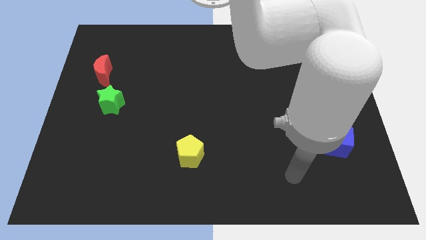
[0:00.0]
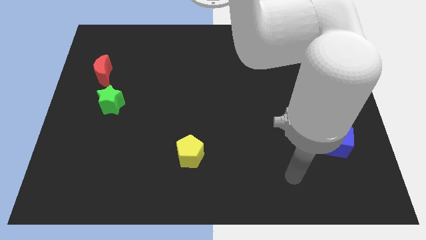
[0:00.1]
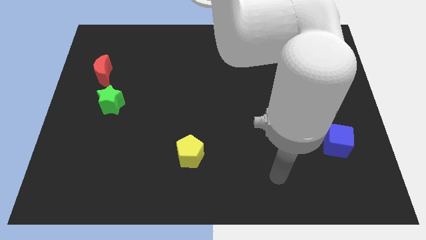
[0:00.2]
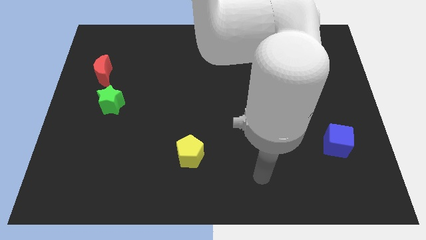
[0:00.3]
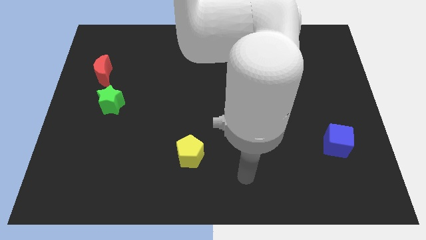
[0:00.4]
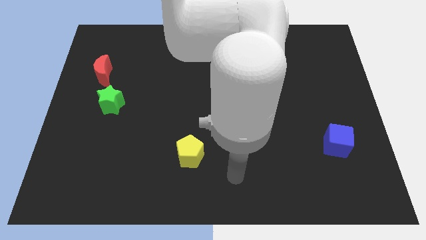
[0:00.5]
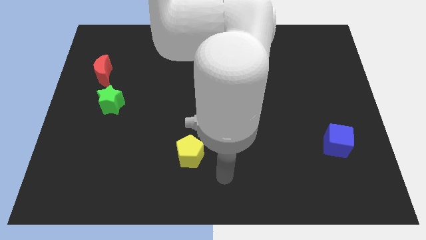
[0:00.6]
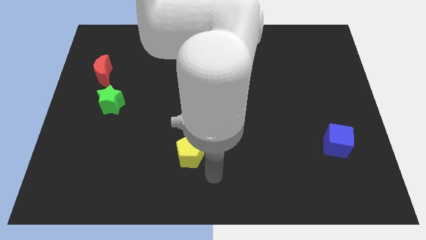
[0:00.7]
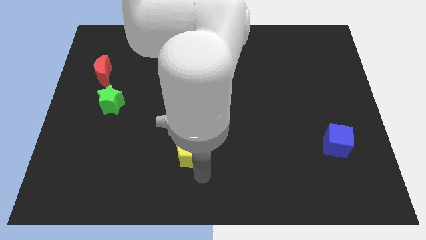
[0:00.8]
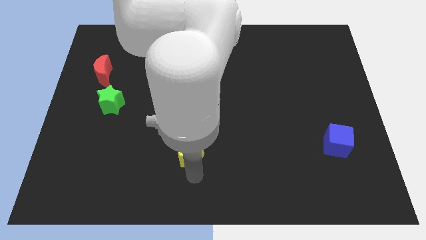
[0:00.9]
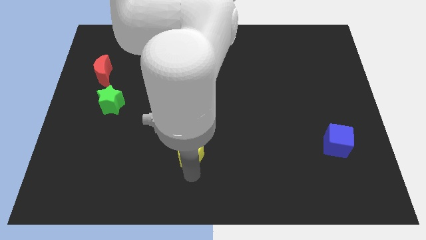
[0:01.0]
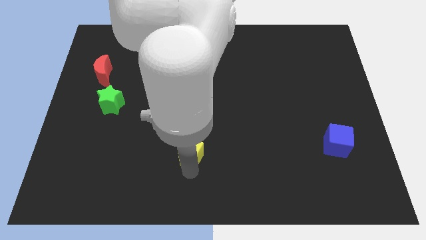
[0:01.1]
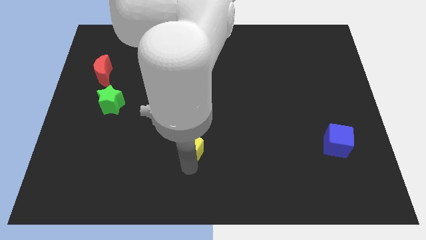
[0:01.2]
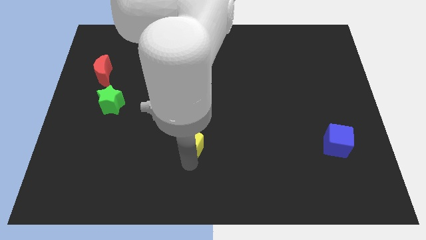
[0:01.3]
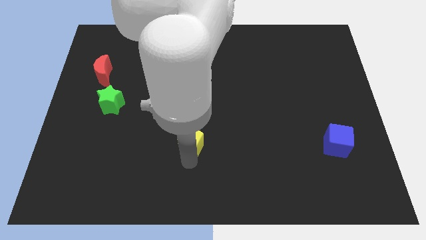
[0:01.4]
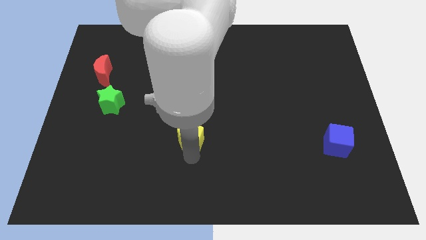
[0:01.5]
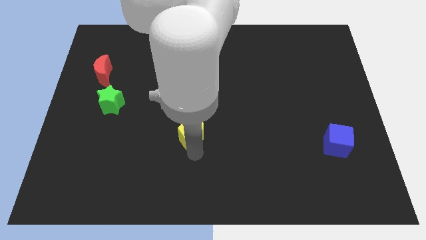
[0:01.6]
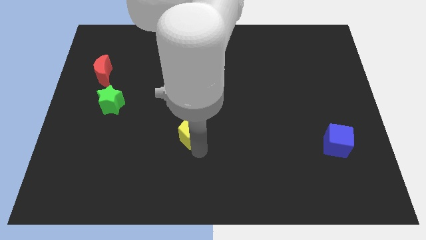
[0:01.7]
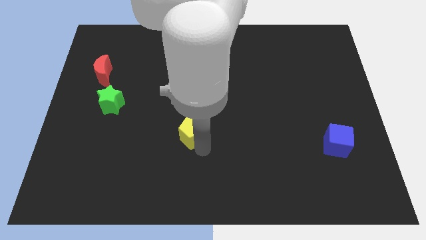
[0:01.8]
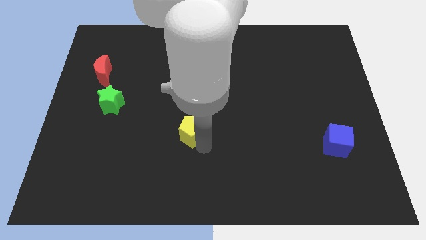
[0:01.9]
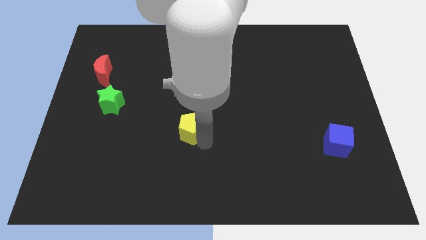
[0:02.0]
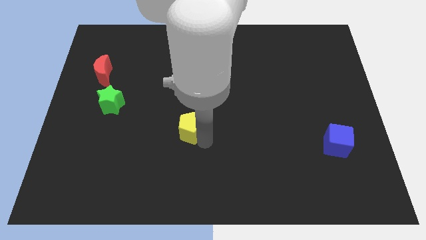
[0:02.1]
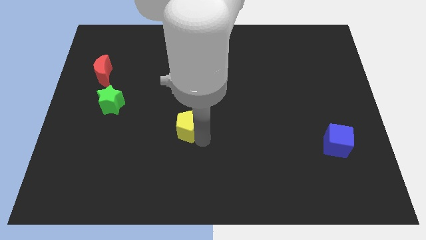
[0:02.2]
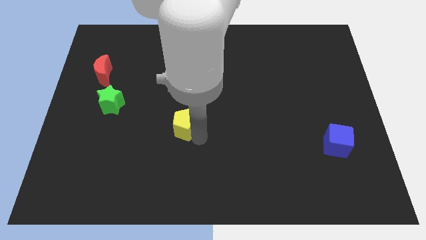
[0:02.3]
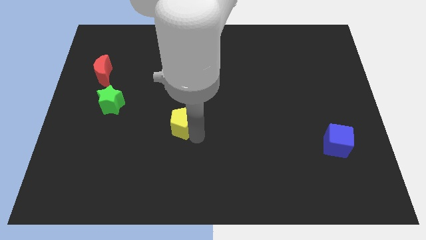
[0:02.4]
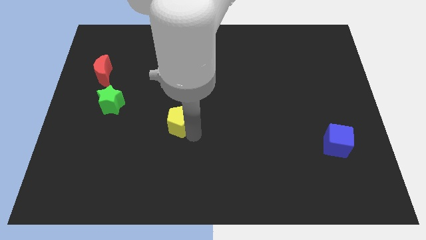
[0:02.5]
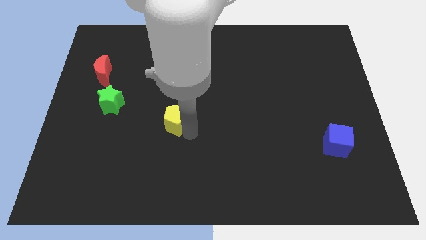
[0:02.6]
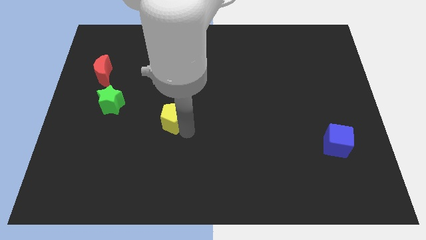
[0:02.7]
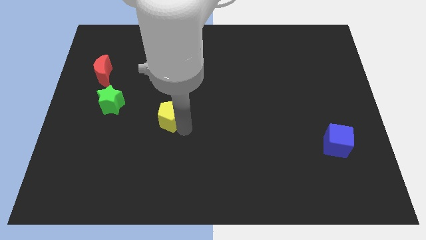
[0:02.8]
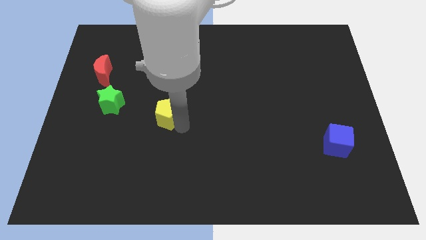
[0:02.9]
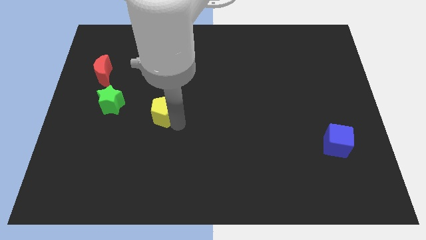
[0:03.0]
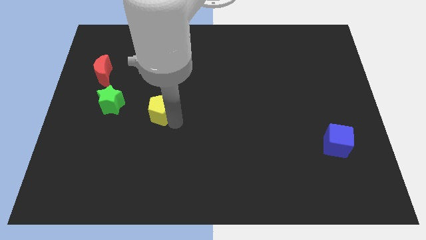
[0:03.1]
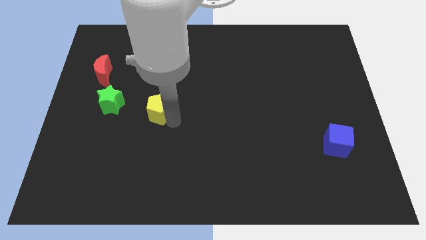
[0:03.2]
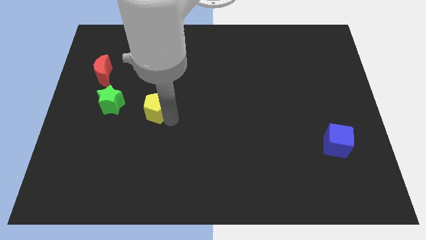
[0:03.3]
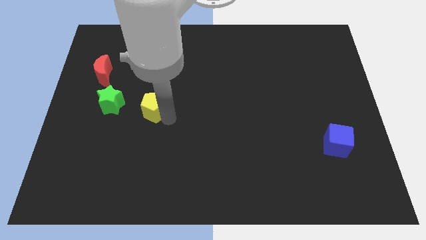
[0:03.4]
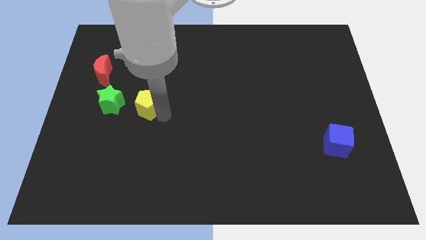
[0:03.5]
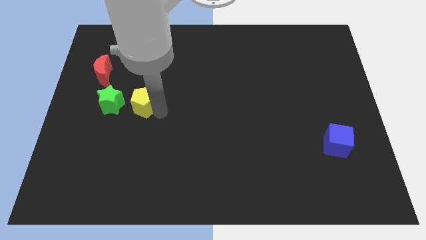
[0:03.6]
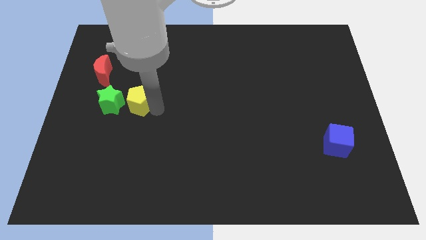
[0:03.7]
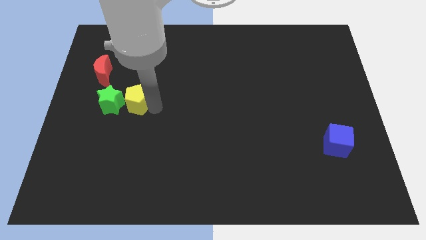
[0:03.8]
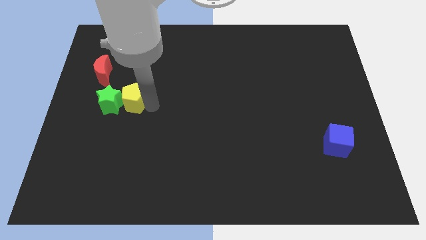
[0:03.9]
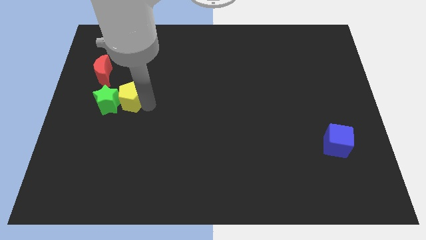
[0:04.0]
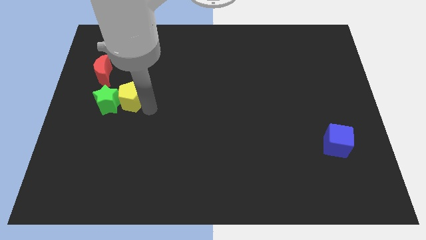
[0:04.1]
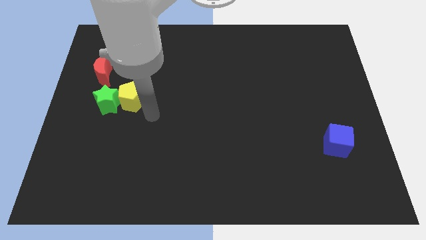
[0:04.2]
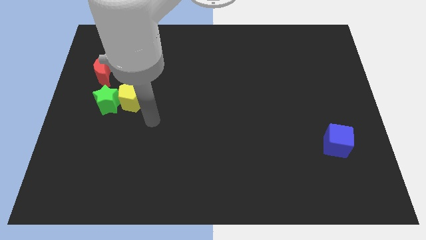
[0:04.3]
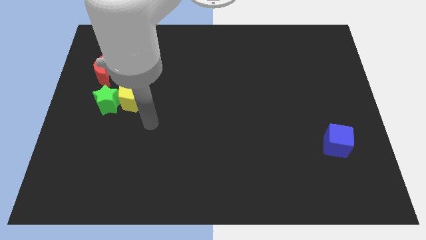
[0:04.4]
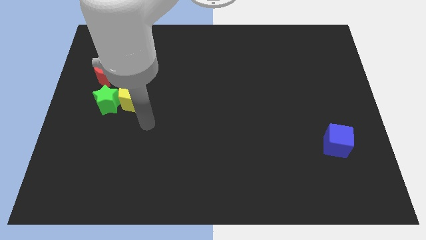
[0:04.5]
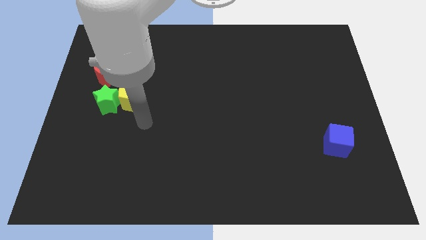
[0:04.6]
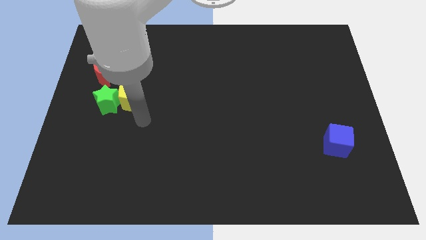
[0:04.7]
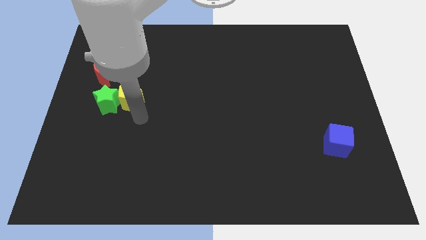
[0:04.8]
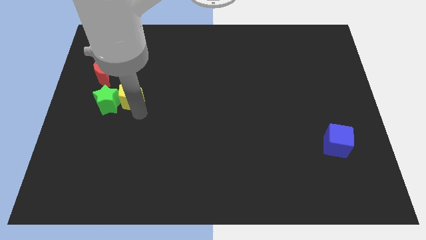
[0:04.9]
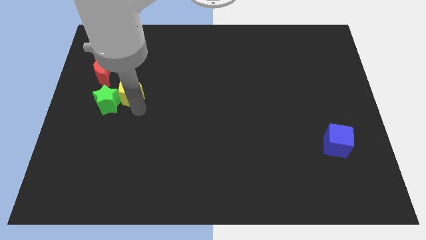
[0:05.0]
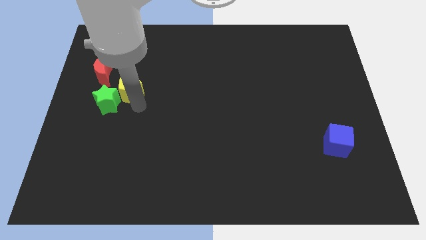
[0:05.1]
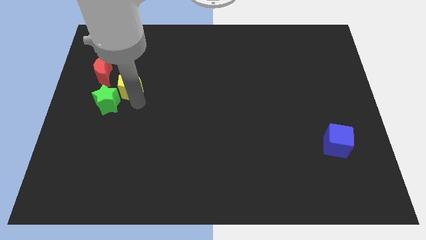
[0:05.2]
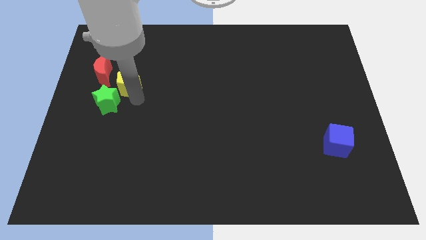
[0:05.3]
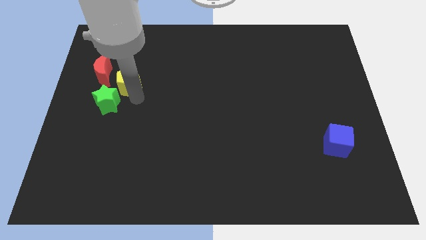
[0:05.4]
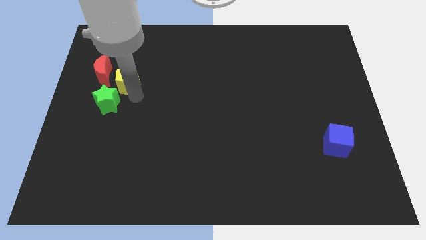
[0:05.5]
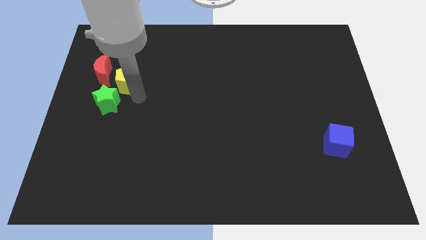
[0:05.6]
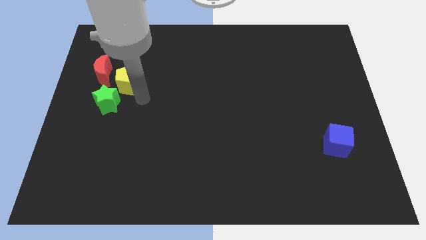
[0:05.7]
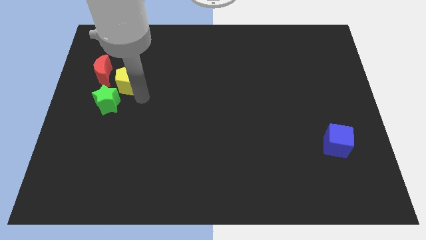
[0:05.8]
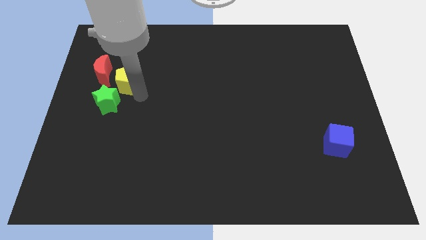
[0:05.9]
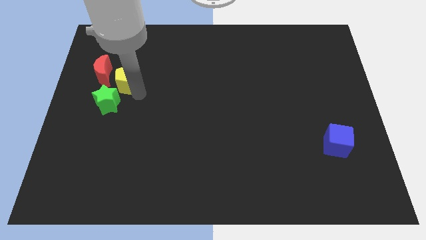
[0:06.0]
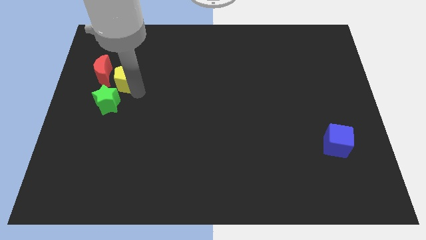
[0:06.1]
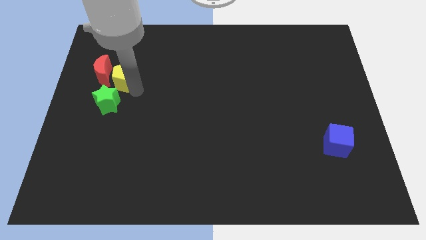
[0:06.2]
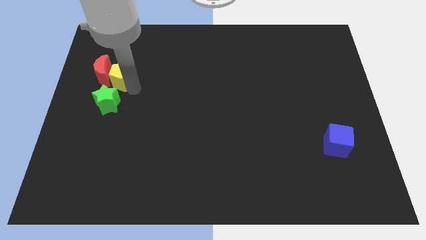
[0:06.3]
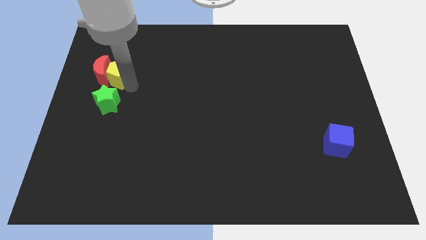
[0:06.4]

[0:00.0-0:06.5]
push the yellow block towards the moon

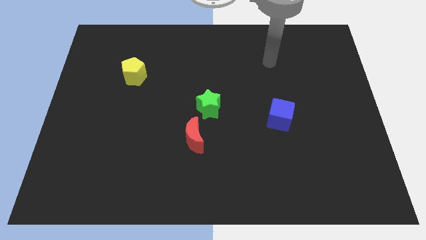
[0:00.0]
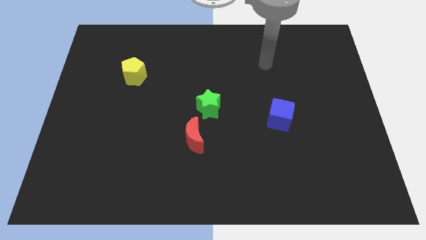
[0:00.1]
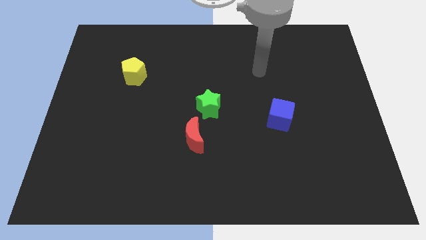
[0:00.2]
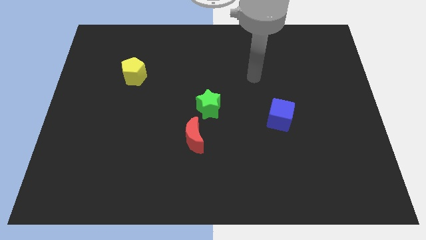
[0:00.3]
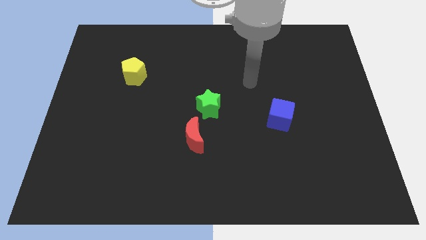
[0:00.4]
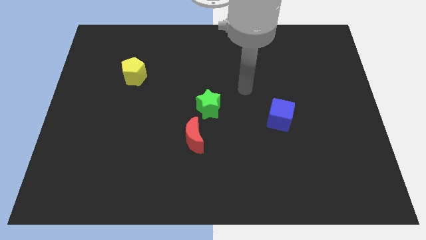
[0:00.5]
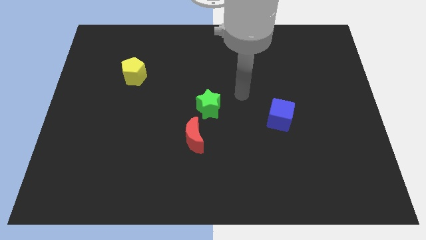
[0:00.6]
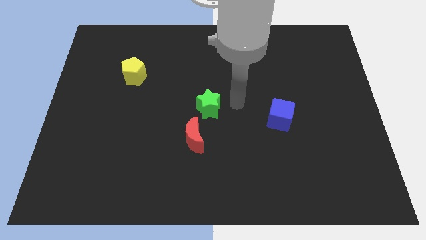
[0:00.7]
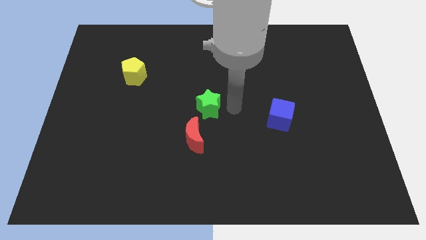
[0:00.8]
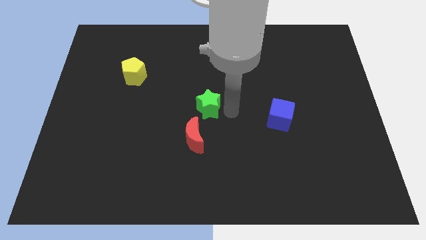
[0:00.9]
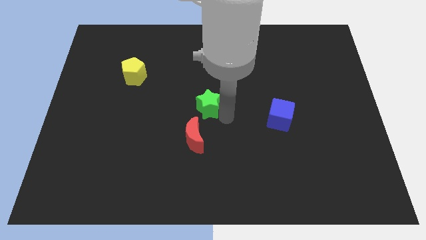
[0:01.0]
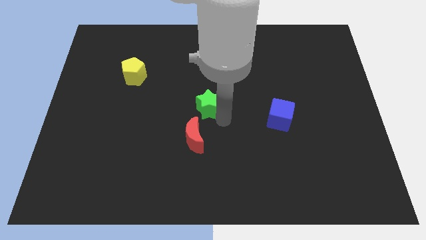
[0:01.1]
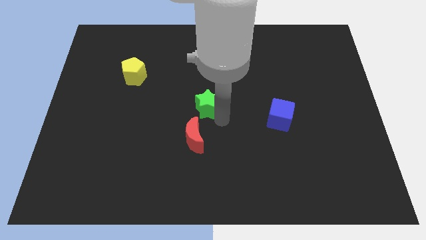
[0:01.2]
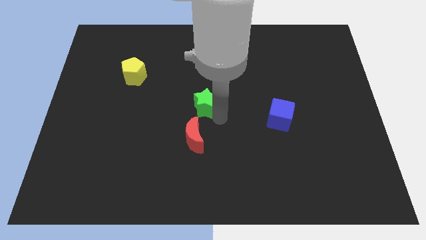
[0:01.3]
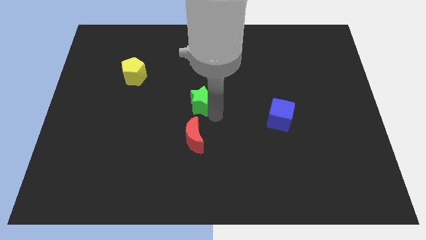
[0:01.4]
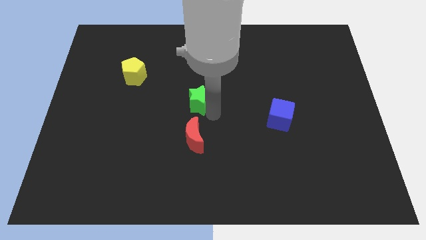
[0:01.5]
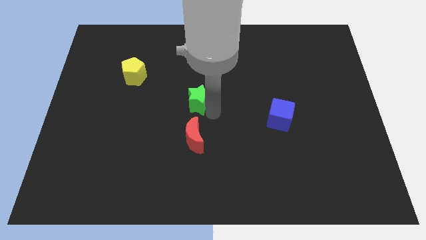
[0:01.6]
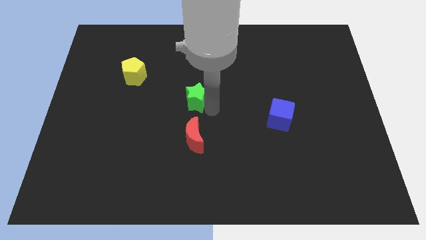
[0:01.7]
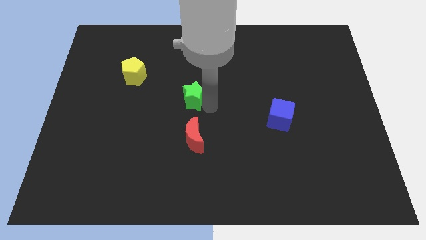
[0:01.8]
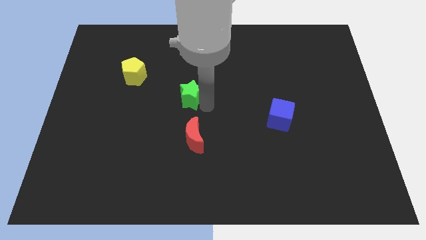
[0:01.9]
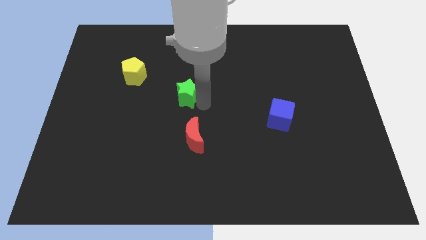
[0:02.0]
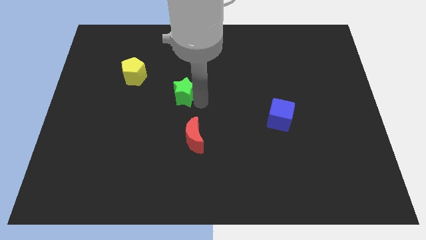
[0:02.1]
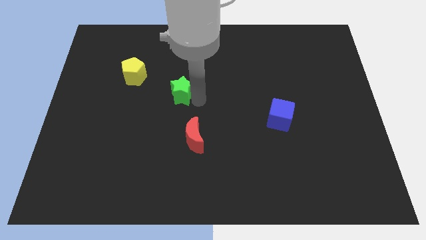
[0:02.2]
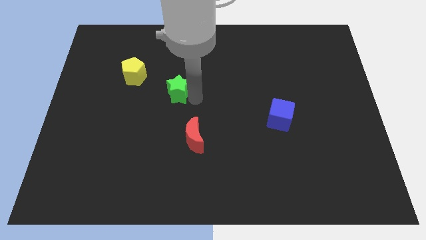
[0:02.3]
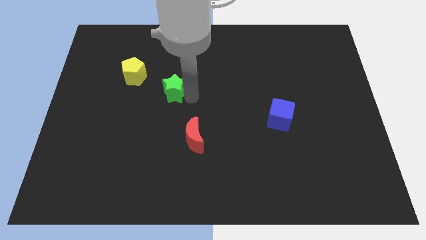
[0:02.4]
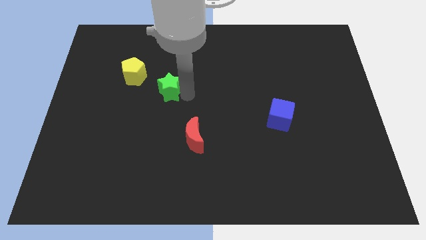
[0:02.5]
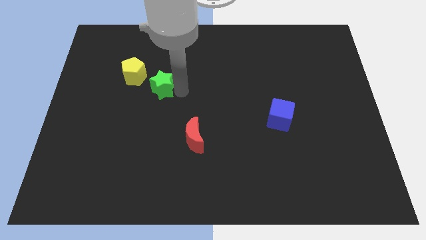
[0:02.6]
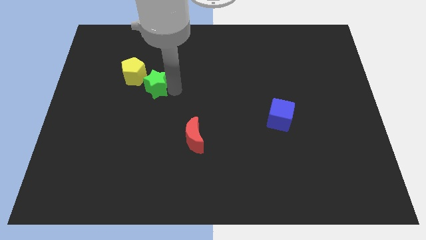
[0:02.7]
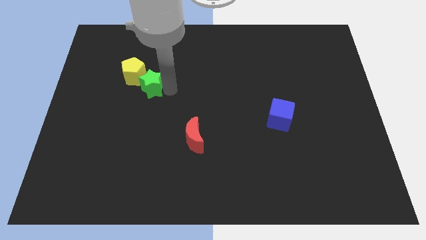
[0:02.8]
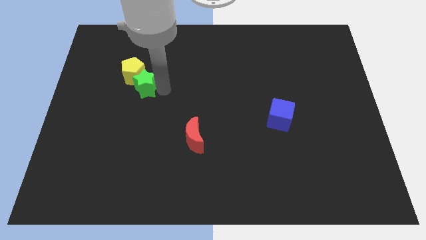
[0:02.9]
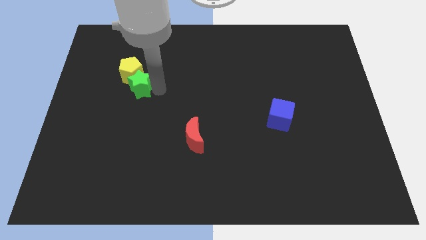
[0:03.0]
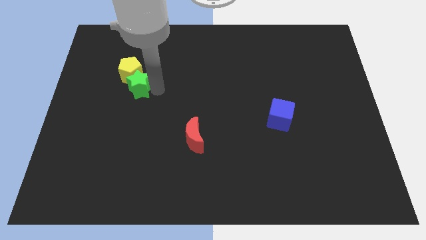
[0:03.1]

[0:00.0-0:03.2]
put the green block next to the pentagon
